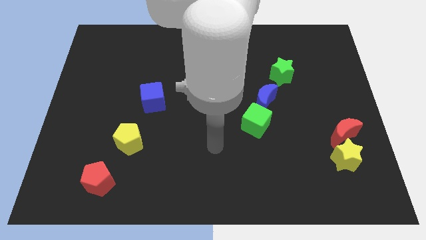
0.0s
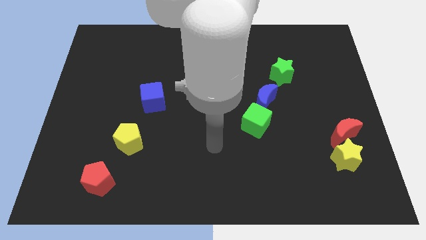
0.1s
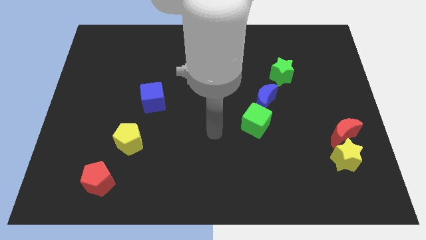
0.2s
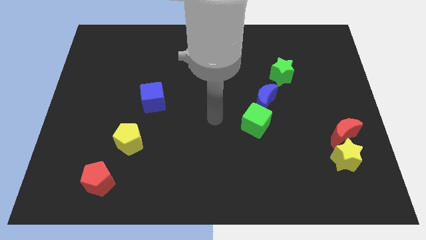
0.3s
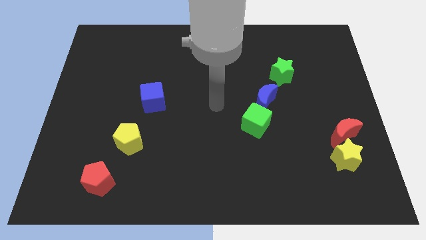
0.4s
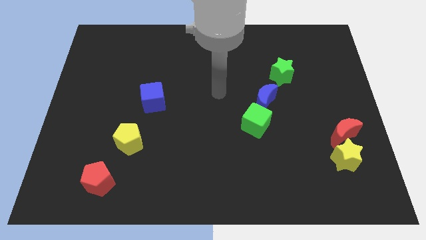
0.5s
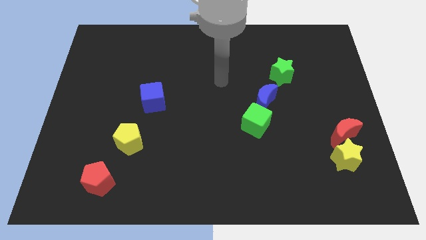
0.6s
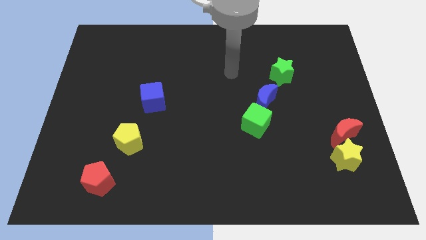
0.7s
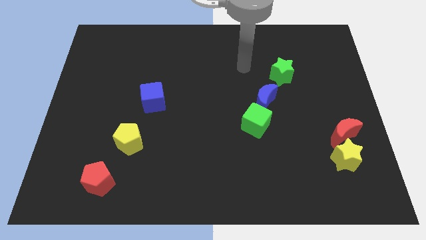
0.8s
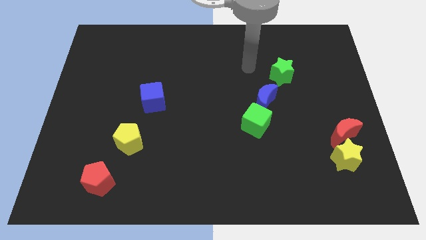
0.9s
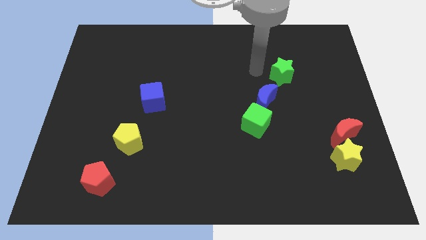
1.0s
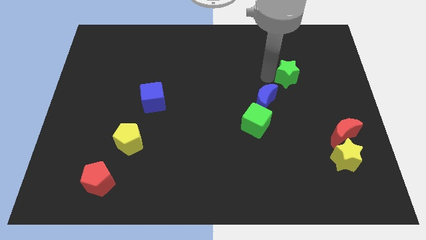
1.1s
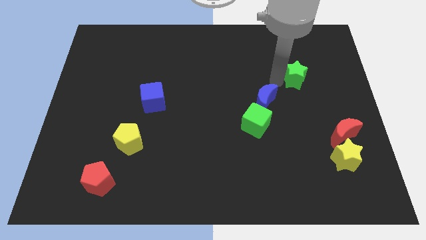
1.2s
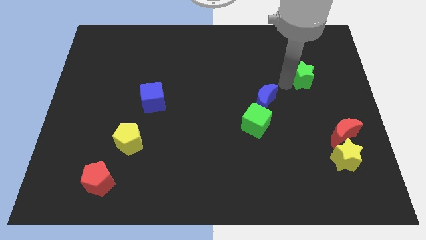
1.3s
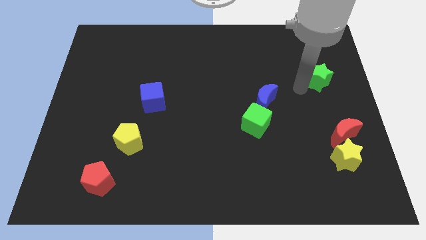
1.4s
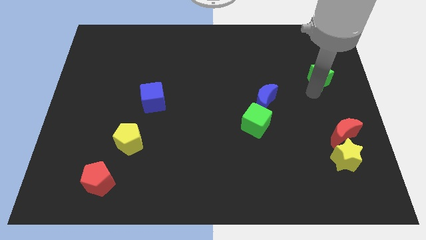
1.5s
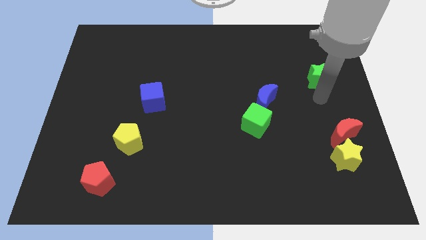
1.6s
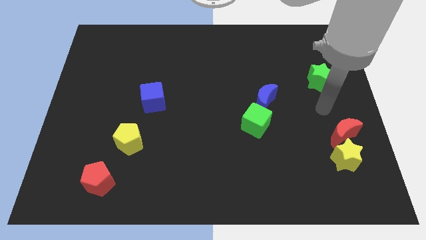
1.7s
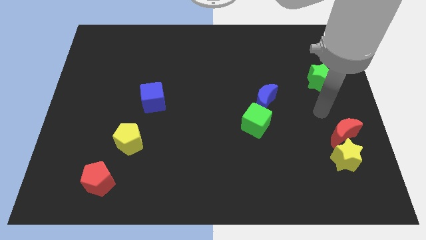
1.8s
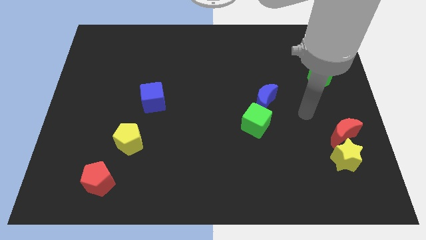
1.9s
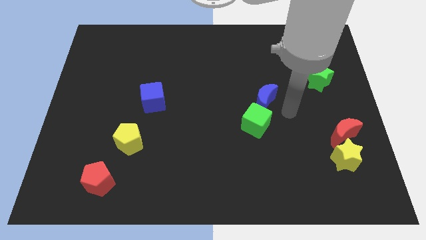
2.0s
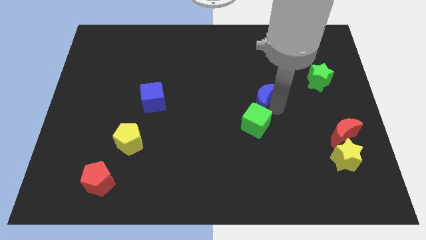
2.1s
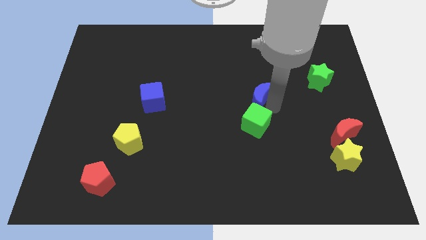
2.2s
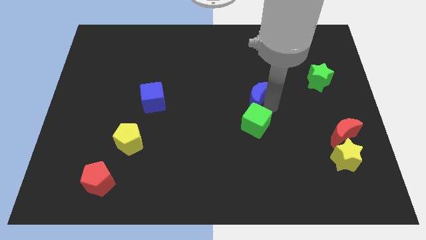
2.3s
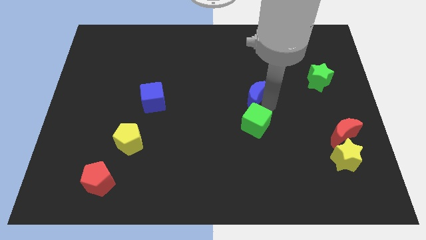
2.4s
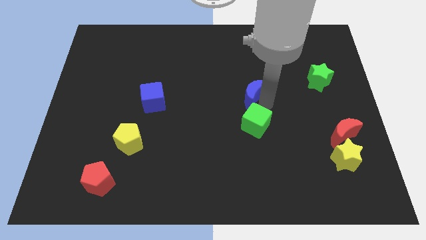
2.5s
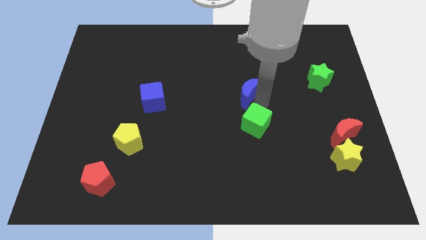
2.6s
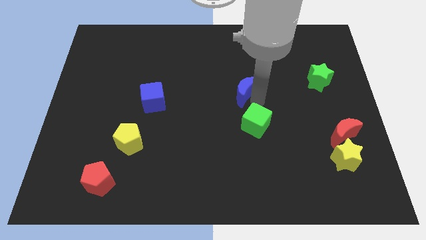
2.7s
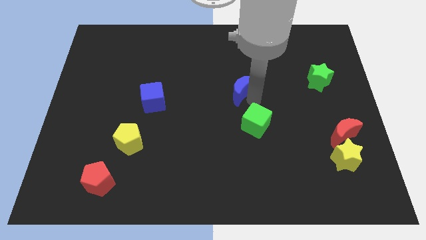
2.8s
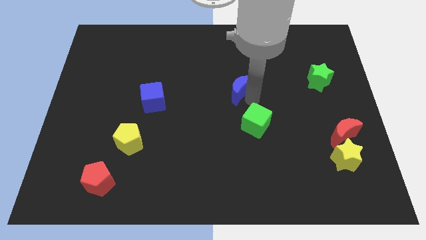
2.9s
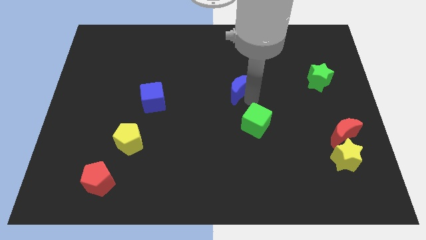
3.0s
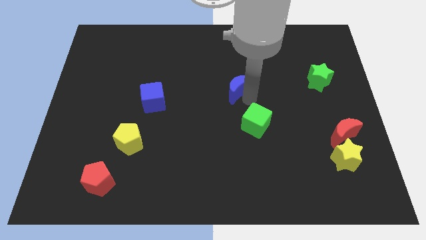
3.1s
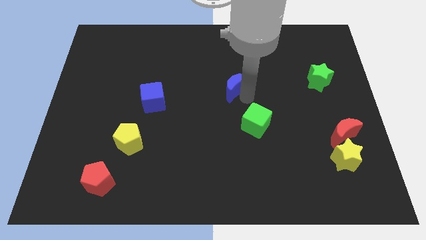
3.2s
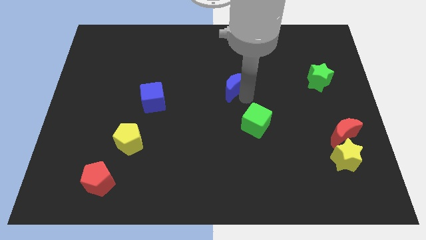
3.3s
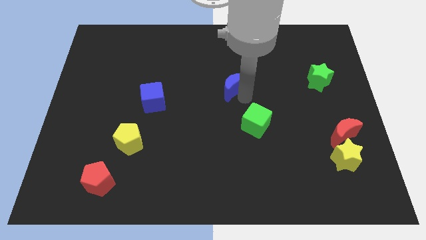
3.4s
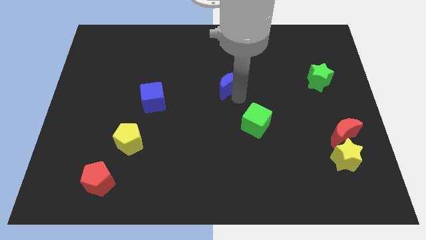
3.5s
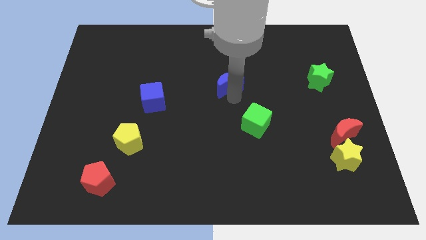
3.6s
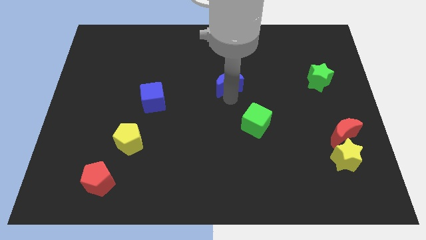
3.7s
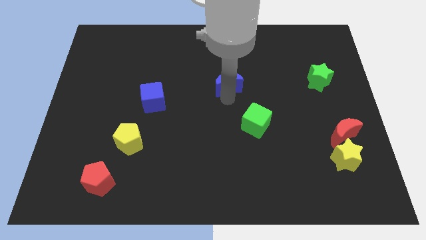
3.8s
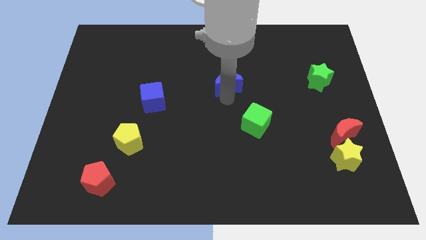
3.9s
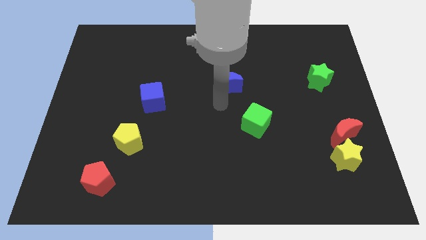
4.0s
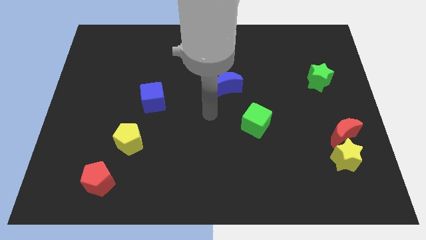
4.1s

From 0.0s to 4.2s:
move blue moon slightly to the left

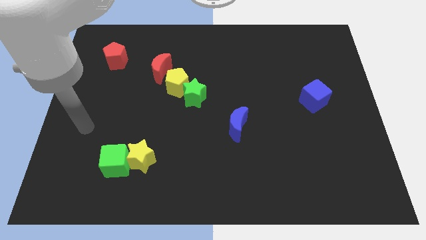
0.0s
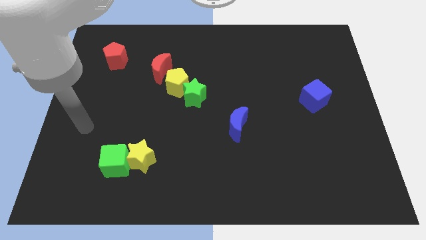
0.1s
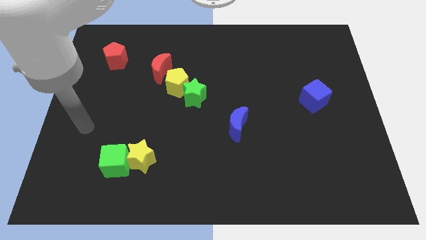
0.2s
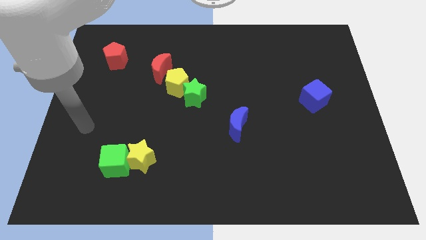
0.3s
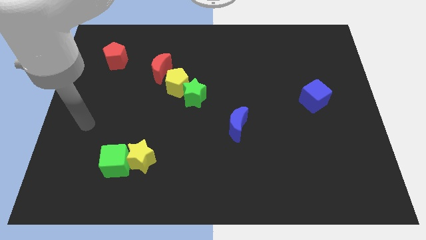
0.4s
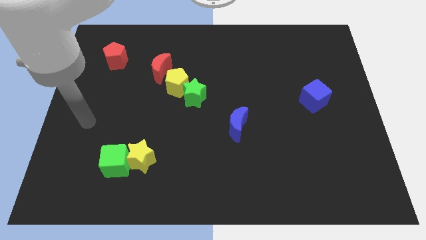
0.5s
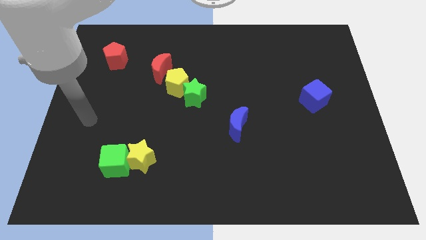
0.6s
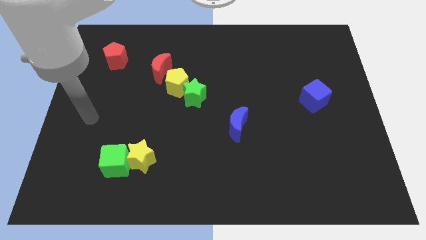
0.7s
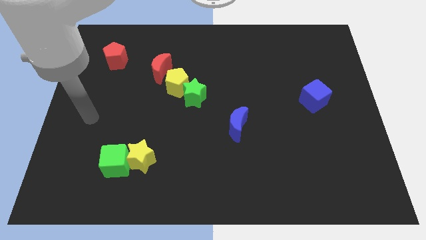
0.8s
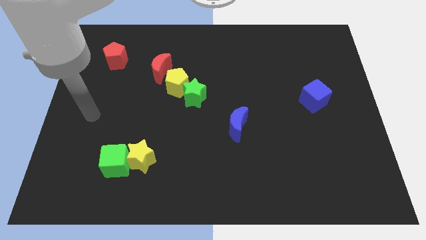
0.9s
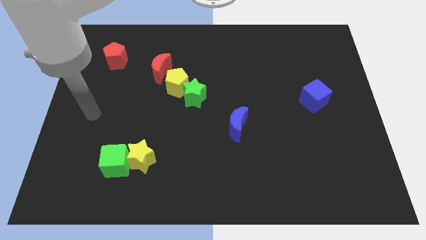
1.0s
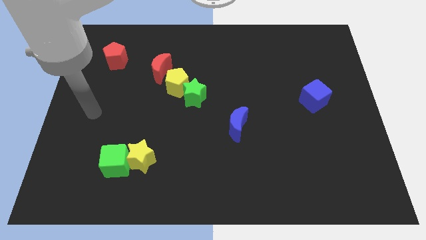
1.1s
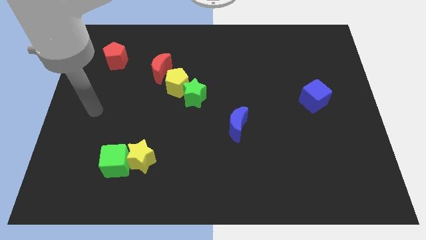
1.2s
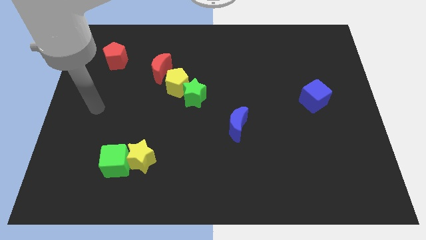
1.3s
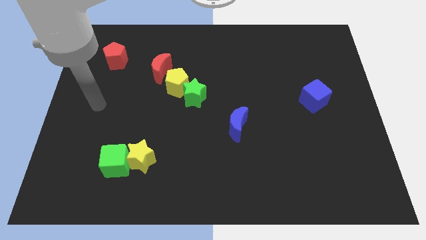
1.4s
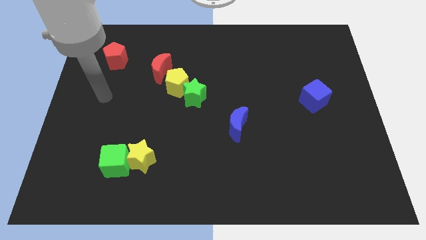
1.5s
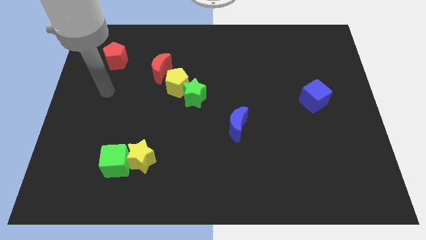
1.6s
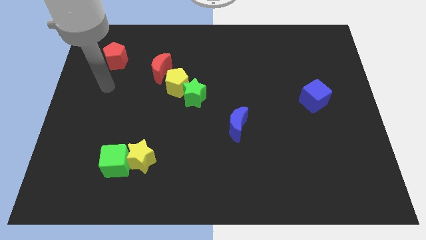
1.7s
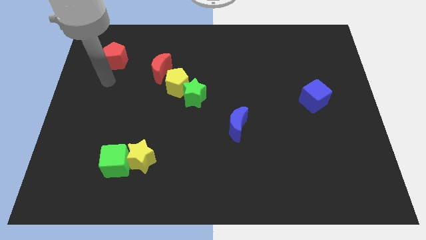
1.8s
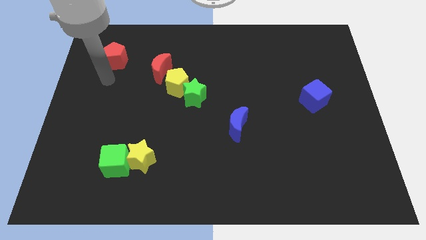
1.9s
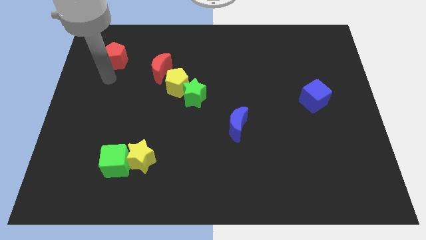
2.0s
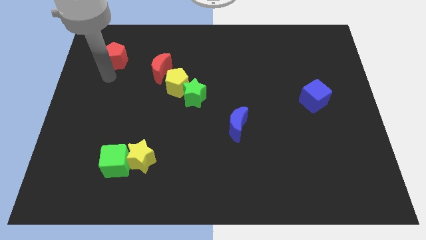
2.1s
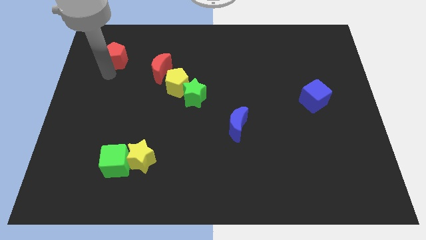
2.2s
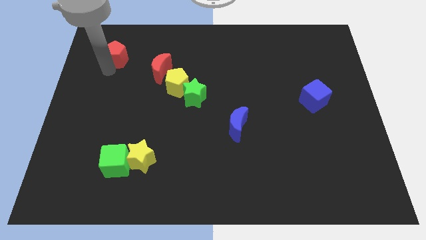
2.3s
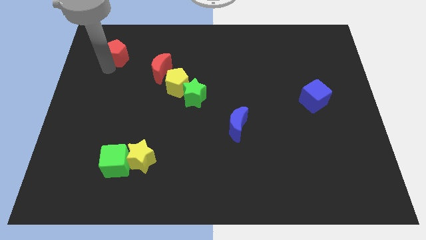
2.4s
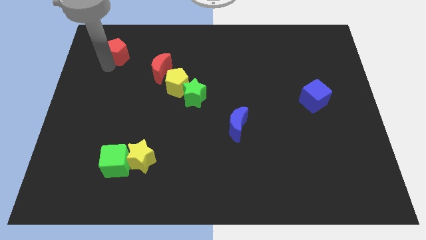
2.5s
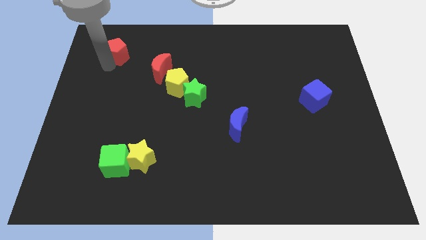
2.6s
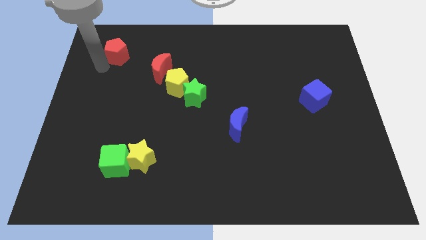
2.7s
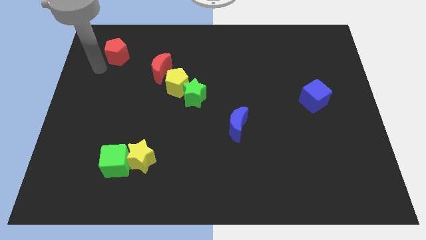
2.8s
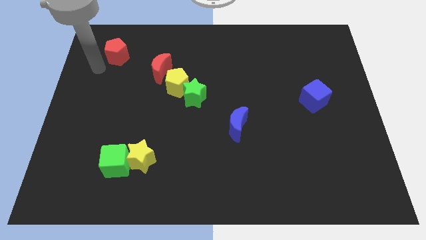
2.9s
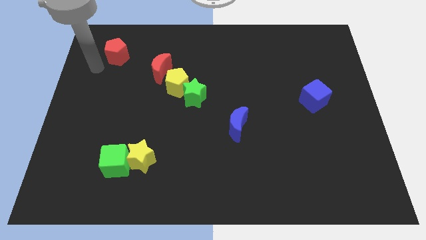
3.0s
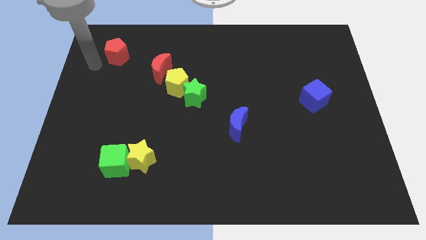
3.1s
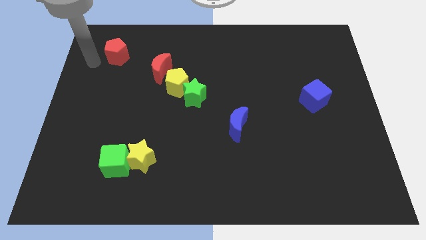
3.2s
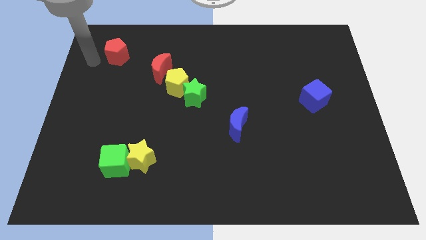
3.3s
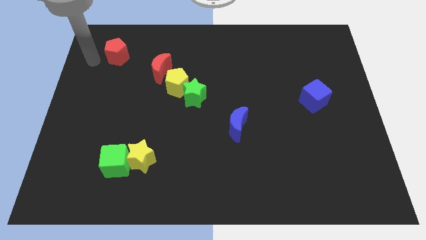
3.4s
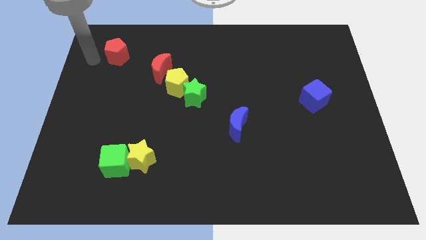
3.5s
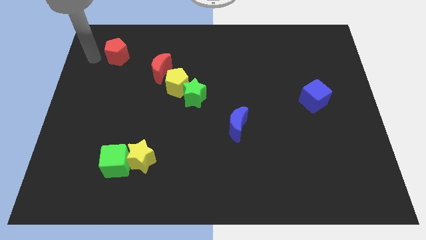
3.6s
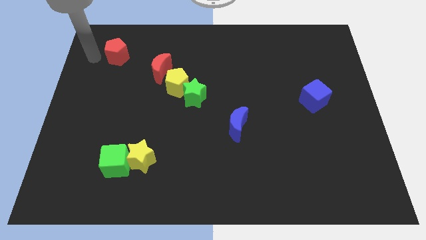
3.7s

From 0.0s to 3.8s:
move arm near red pentagon

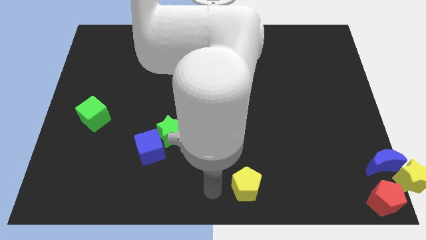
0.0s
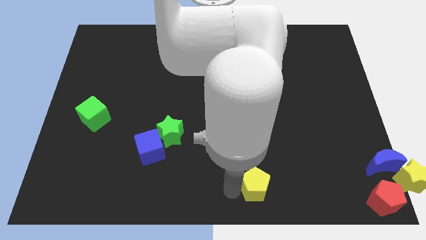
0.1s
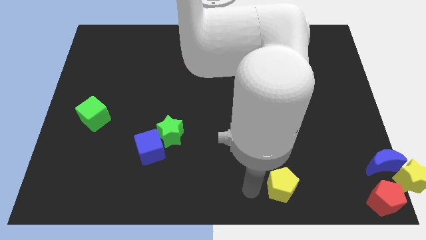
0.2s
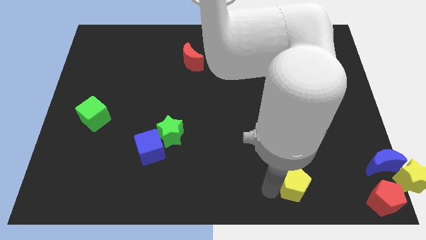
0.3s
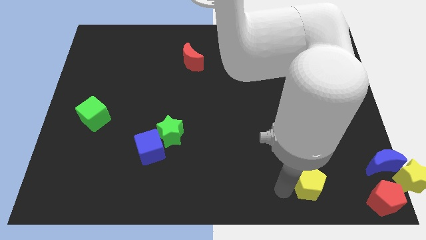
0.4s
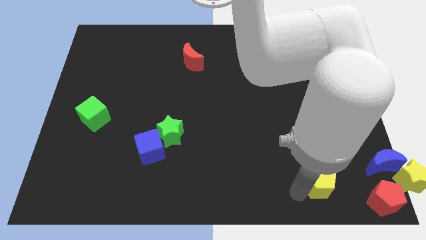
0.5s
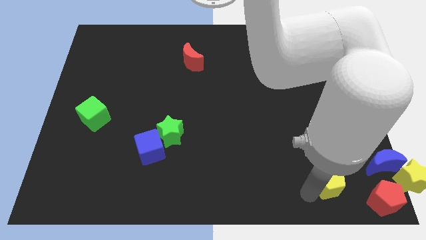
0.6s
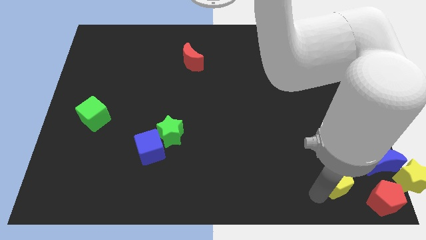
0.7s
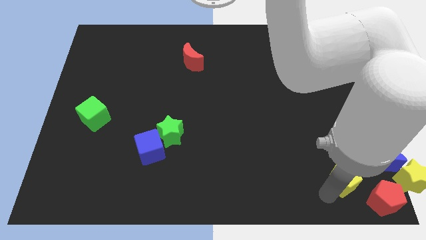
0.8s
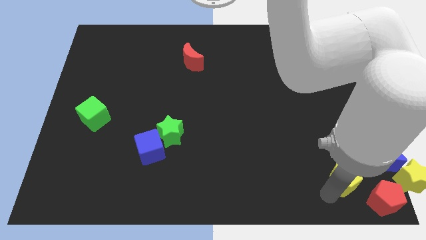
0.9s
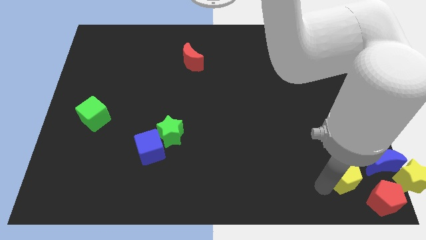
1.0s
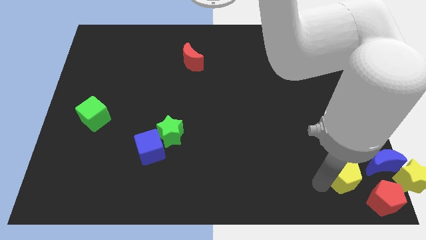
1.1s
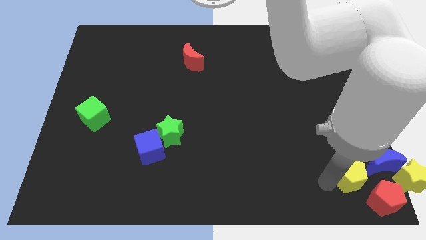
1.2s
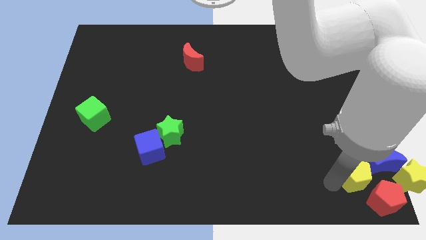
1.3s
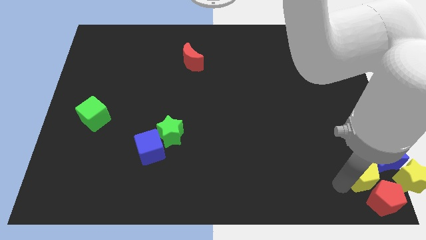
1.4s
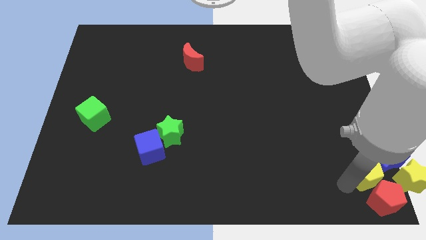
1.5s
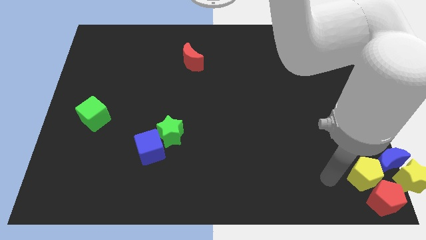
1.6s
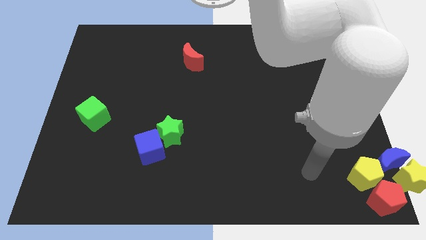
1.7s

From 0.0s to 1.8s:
push the yellow pentagon into the blue crescent
